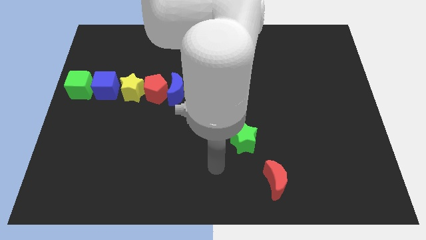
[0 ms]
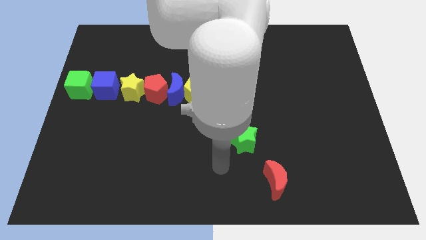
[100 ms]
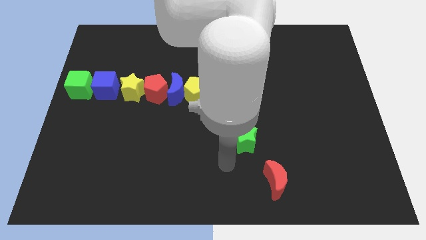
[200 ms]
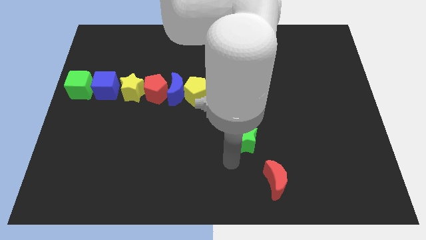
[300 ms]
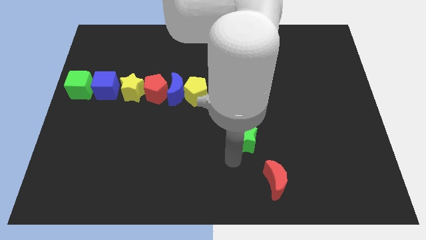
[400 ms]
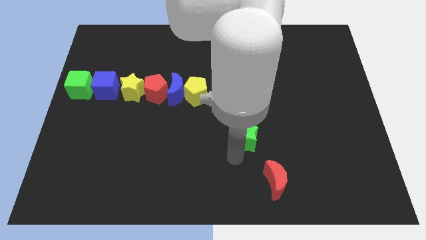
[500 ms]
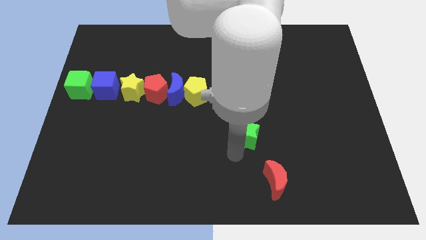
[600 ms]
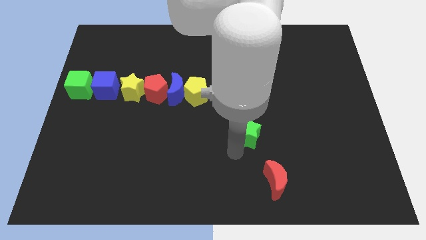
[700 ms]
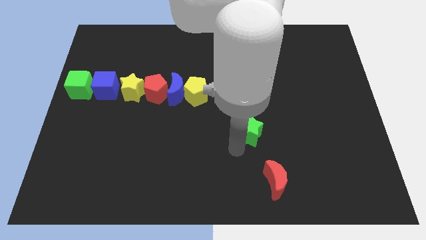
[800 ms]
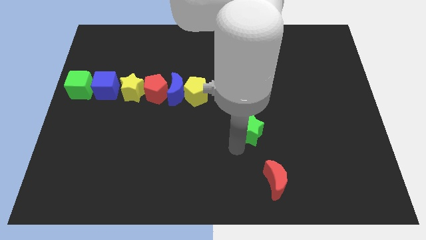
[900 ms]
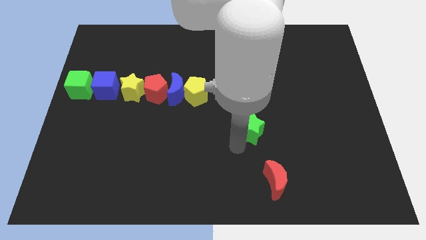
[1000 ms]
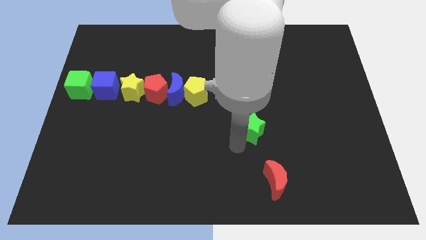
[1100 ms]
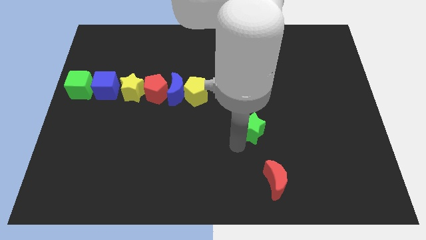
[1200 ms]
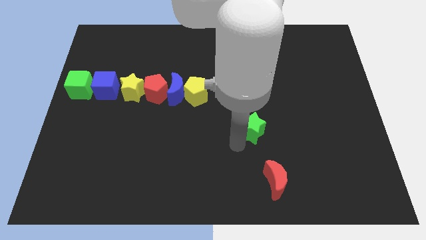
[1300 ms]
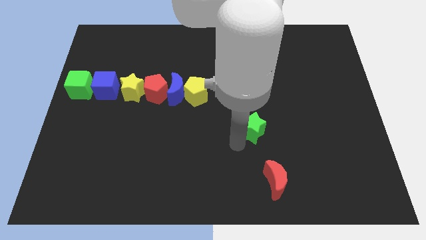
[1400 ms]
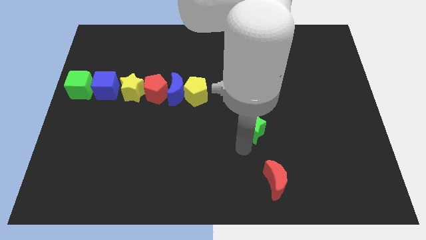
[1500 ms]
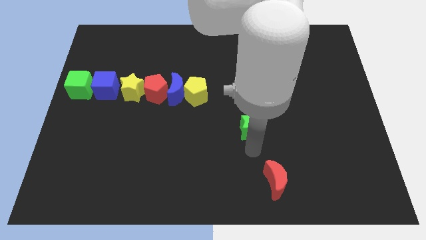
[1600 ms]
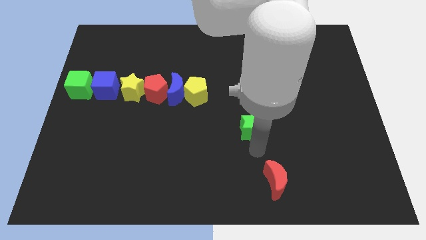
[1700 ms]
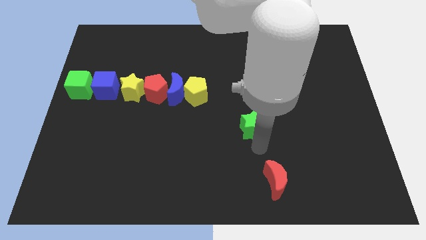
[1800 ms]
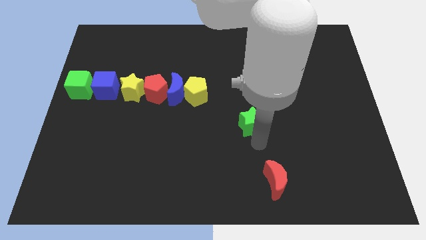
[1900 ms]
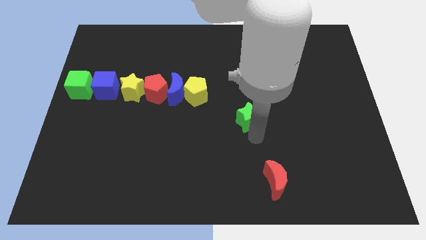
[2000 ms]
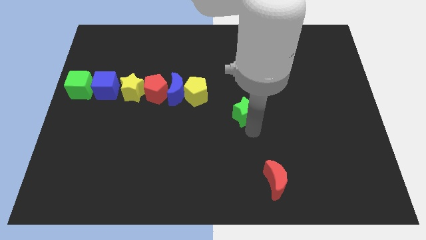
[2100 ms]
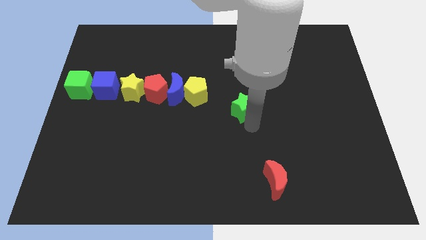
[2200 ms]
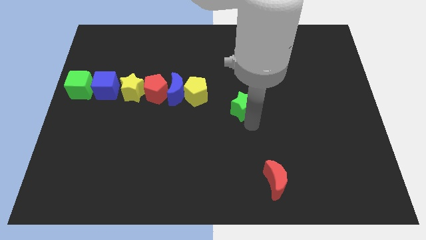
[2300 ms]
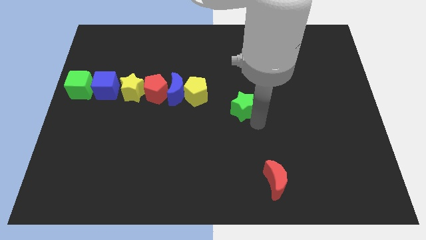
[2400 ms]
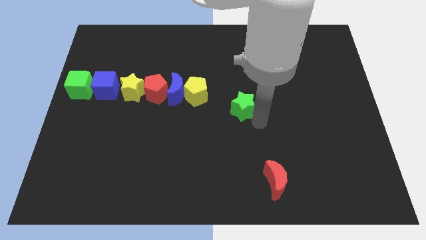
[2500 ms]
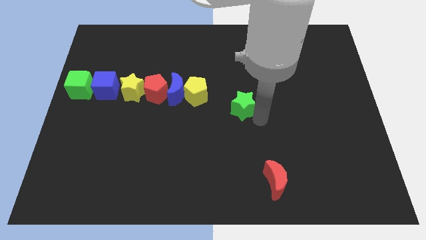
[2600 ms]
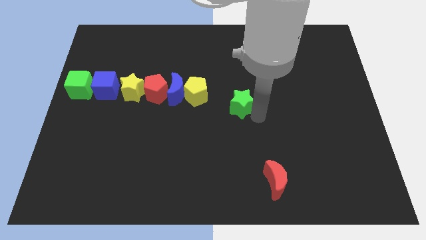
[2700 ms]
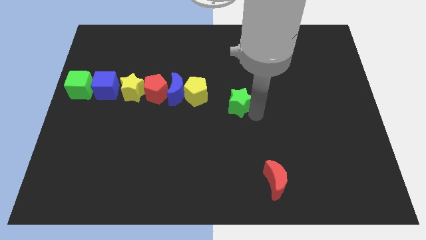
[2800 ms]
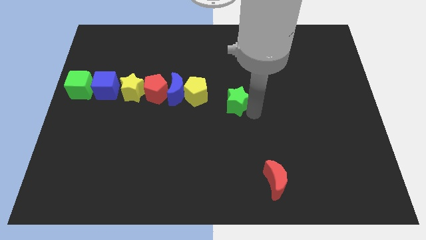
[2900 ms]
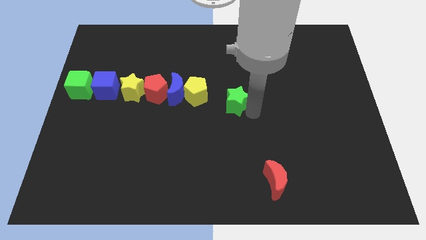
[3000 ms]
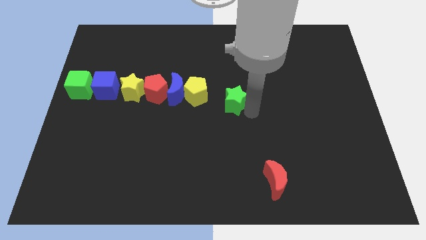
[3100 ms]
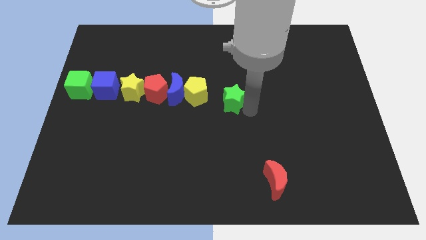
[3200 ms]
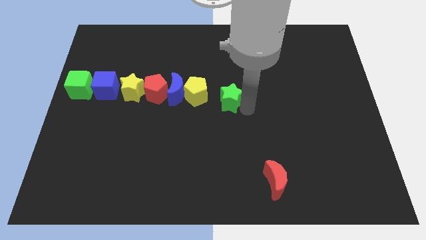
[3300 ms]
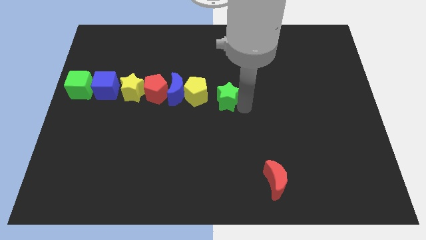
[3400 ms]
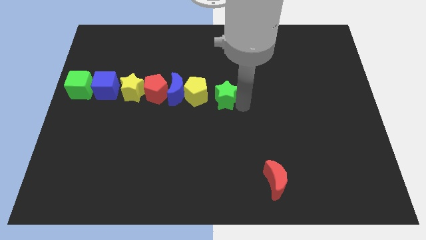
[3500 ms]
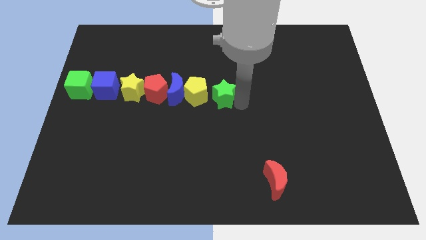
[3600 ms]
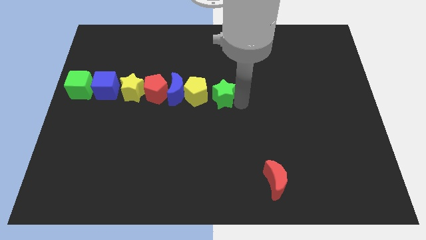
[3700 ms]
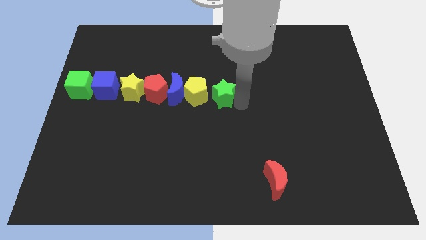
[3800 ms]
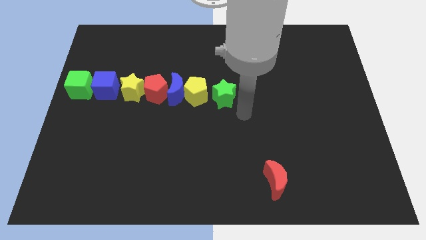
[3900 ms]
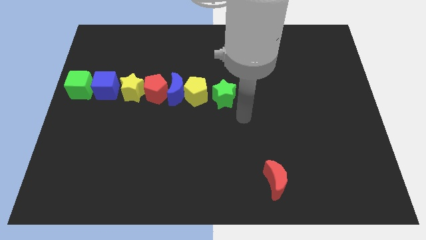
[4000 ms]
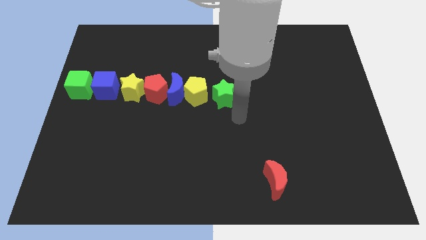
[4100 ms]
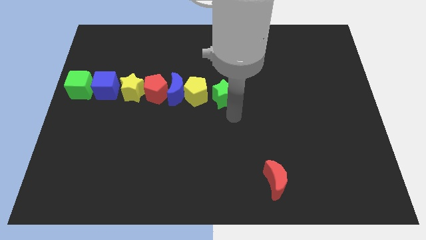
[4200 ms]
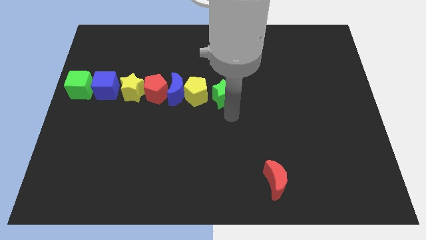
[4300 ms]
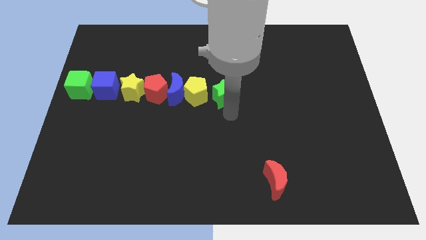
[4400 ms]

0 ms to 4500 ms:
place the green star at the center of the board

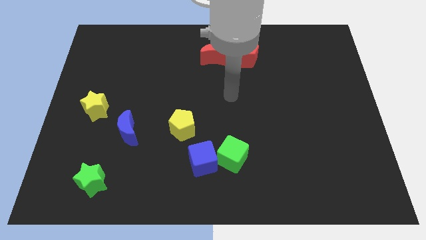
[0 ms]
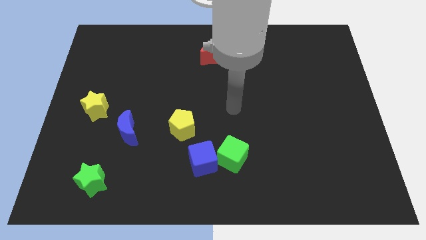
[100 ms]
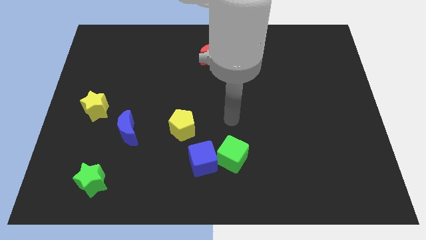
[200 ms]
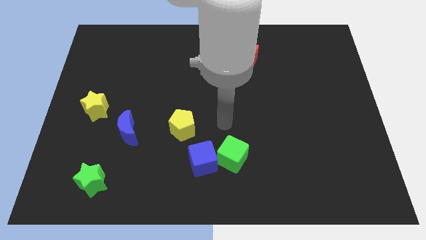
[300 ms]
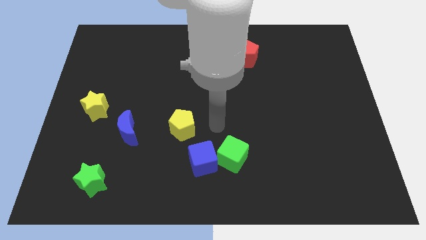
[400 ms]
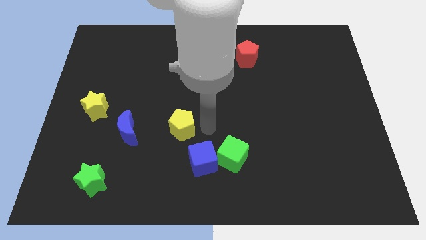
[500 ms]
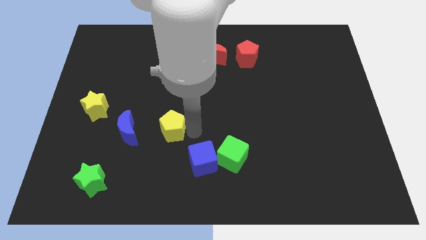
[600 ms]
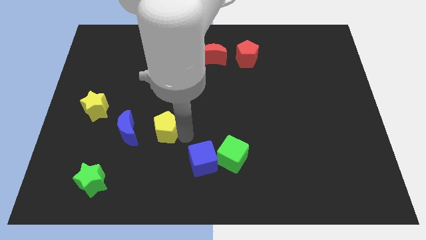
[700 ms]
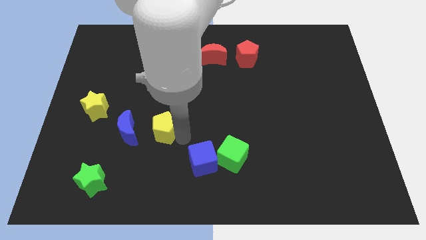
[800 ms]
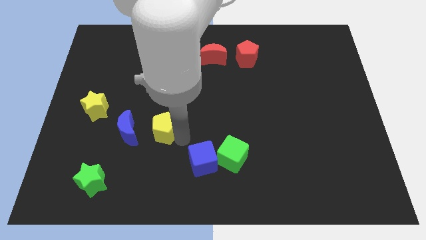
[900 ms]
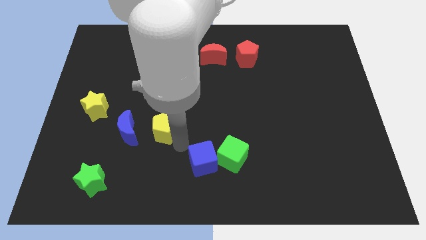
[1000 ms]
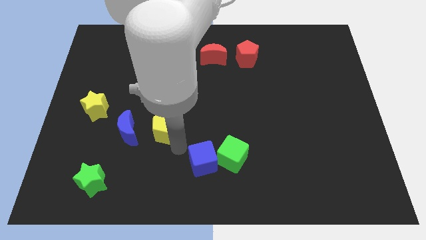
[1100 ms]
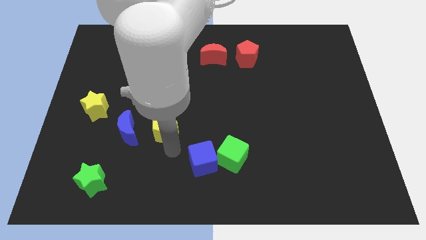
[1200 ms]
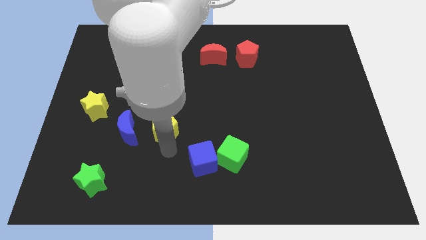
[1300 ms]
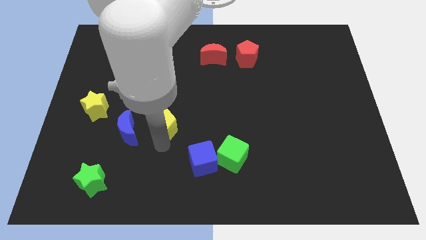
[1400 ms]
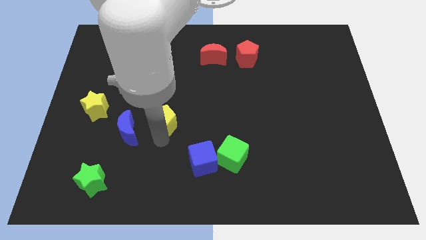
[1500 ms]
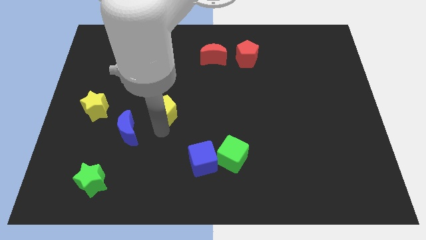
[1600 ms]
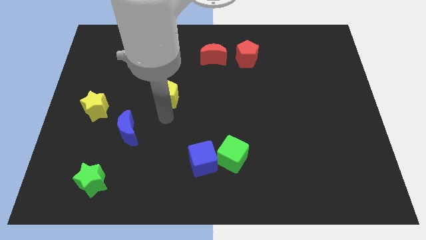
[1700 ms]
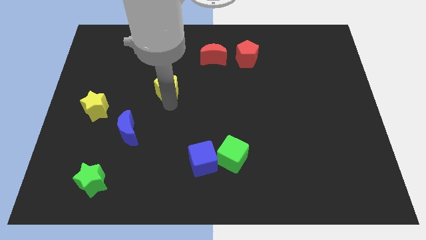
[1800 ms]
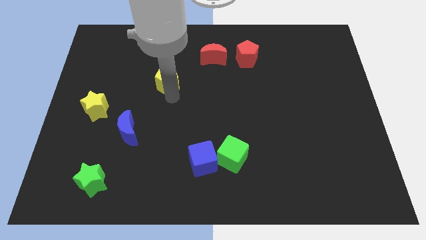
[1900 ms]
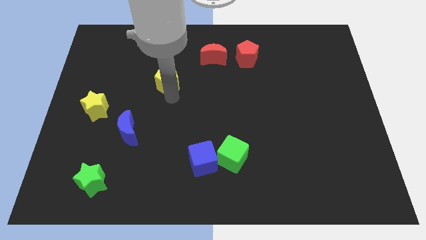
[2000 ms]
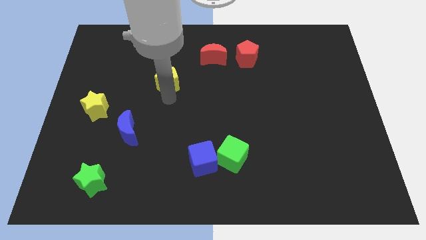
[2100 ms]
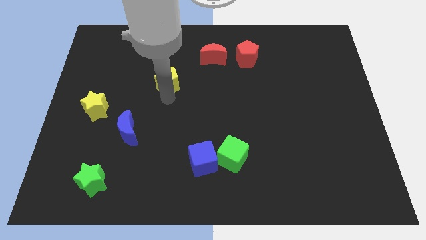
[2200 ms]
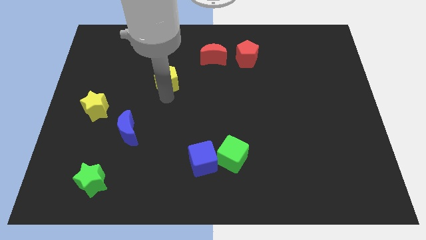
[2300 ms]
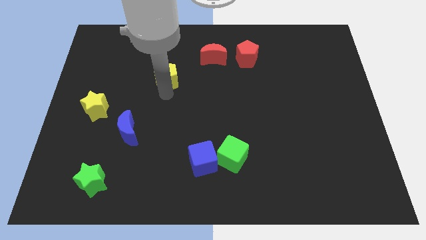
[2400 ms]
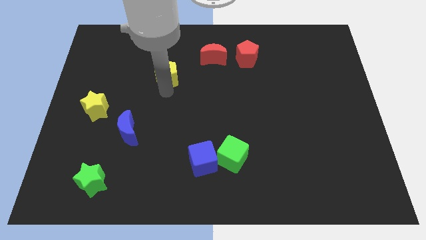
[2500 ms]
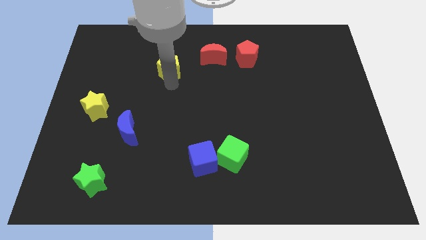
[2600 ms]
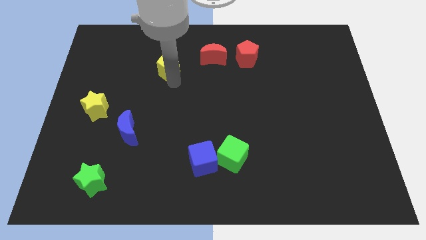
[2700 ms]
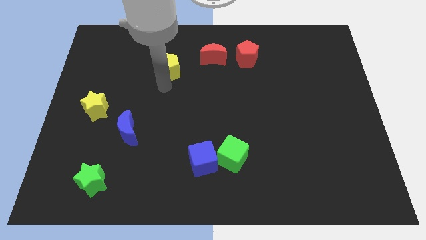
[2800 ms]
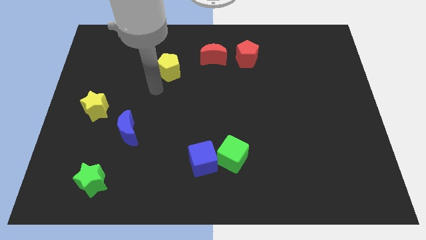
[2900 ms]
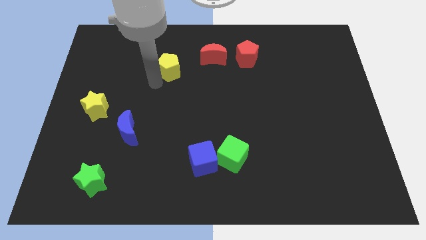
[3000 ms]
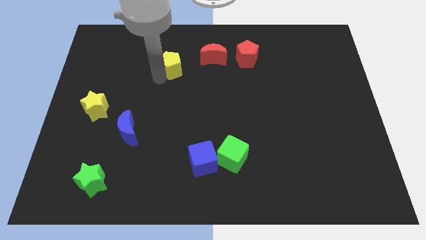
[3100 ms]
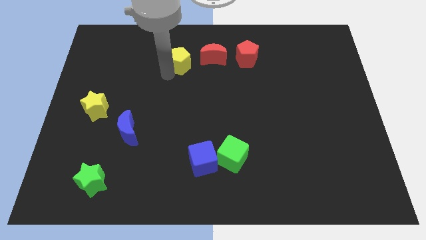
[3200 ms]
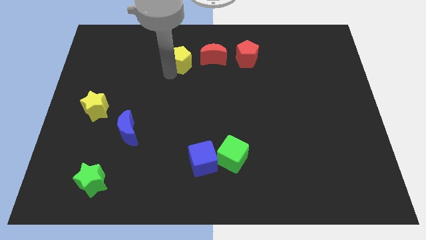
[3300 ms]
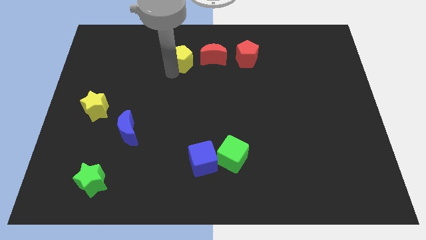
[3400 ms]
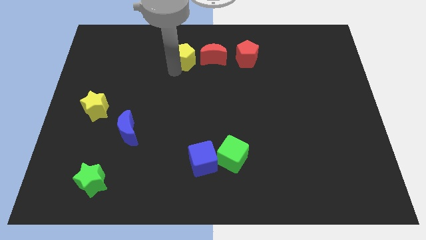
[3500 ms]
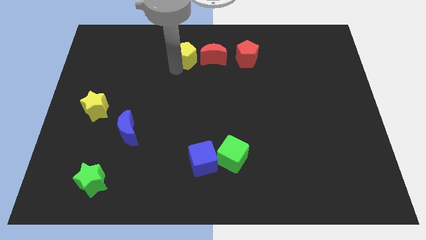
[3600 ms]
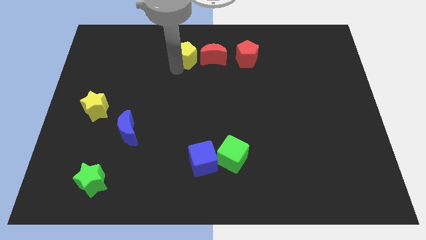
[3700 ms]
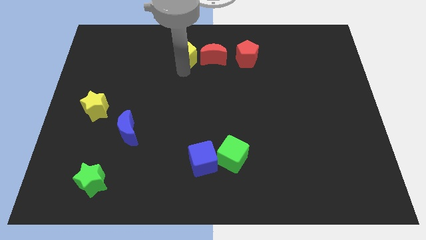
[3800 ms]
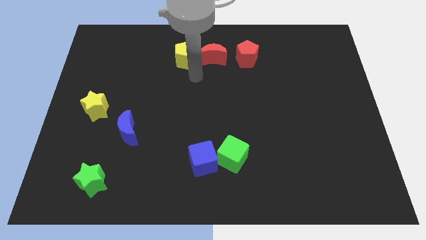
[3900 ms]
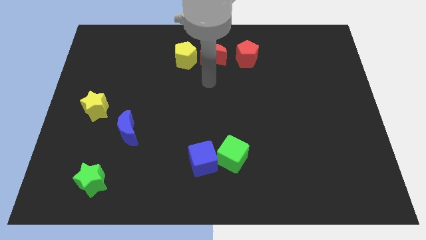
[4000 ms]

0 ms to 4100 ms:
push the yellow pentagon to the left of red crescent

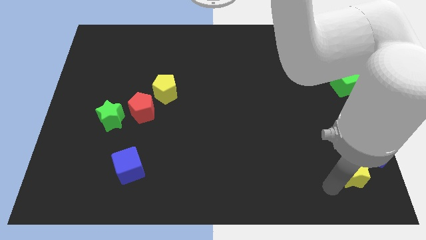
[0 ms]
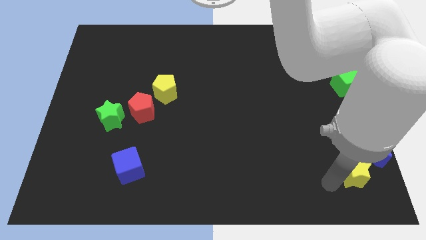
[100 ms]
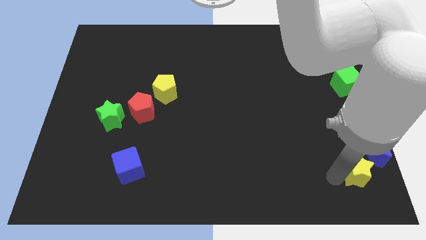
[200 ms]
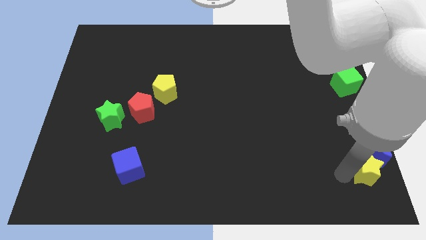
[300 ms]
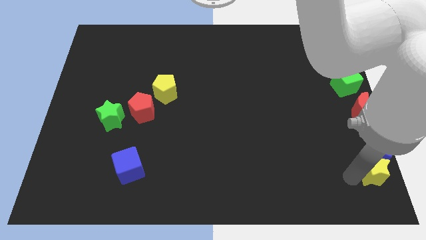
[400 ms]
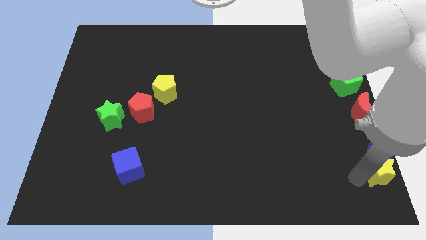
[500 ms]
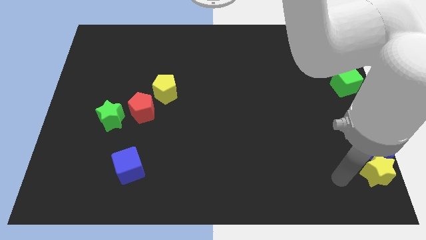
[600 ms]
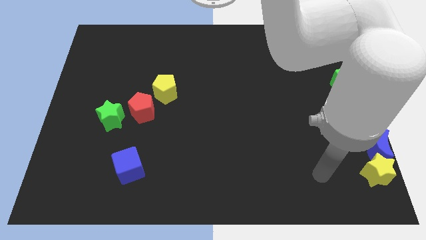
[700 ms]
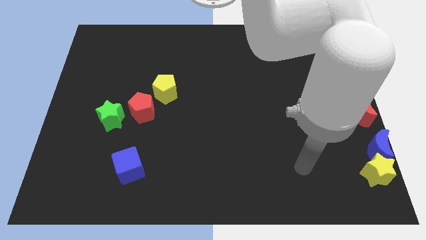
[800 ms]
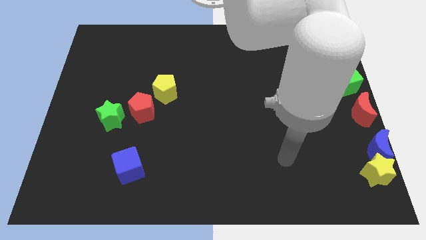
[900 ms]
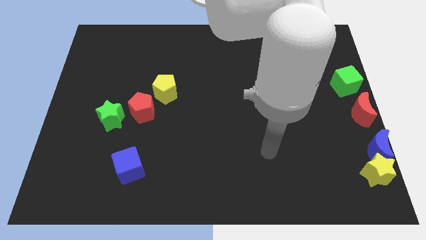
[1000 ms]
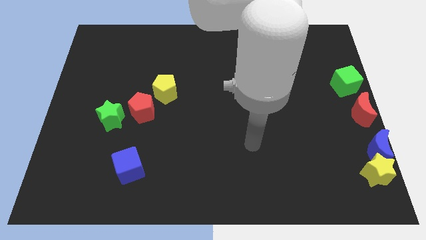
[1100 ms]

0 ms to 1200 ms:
place the yellow star below the blue crescent
